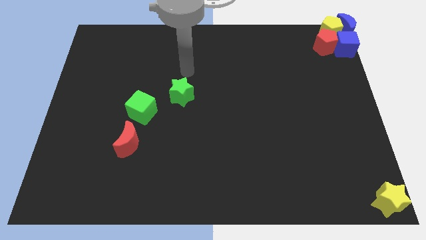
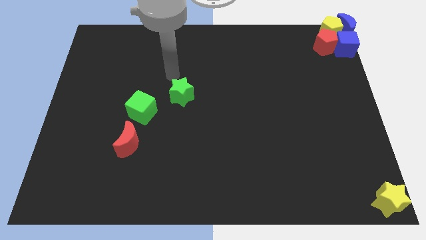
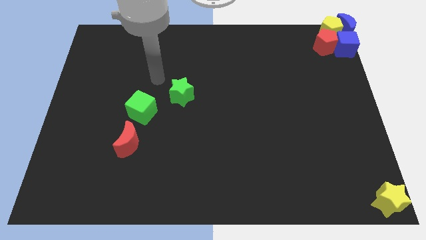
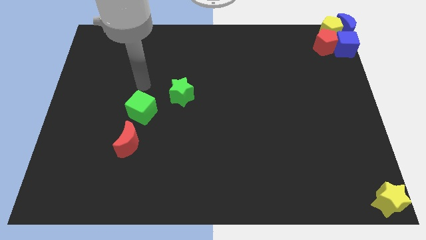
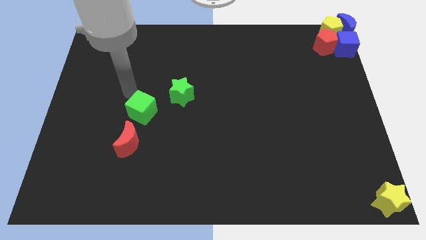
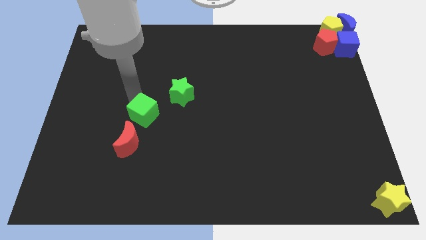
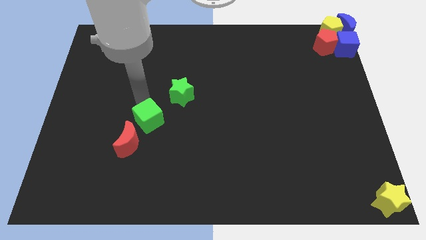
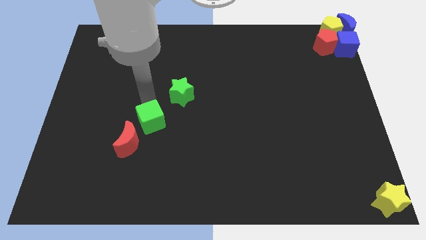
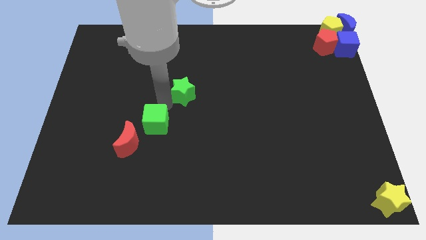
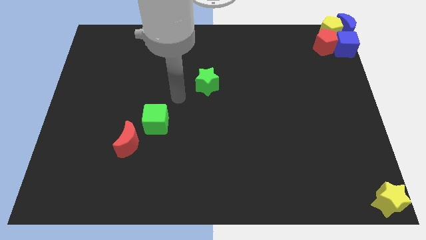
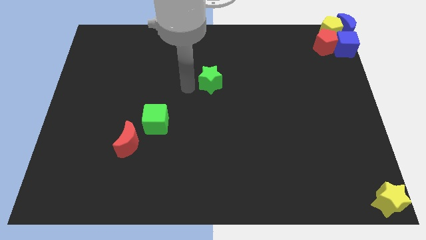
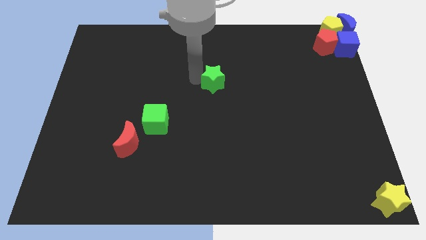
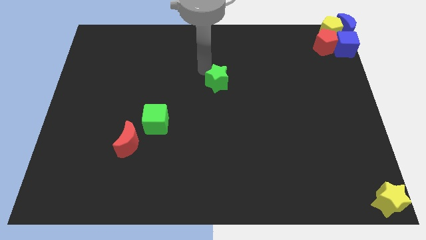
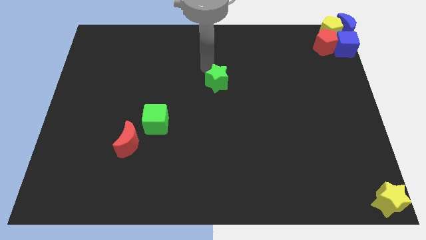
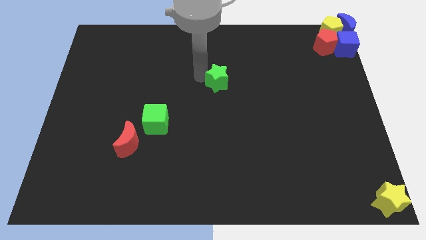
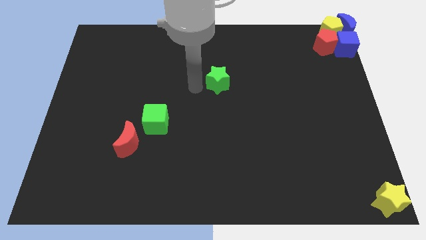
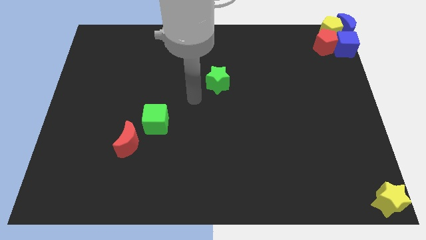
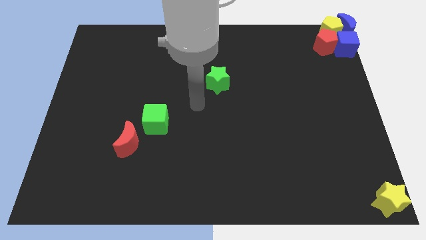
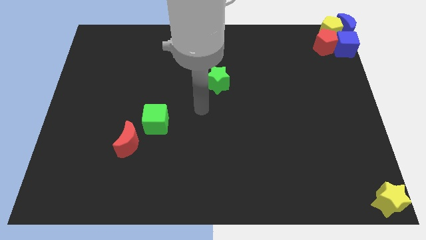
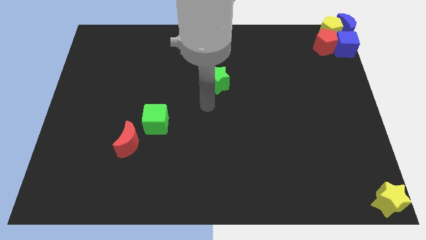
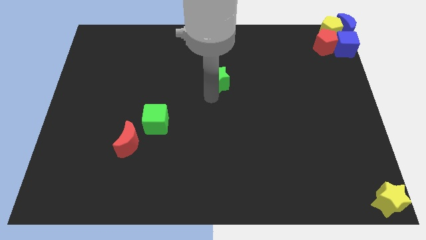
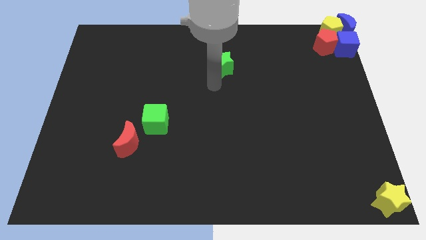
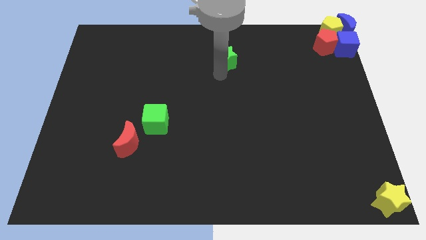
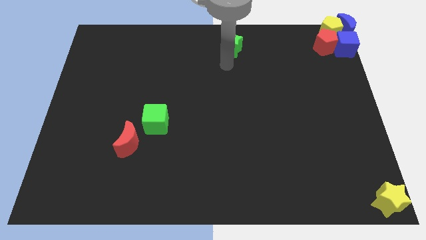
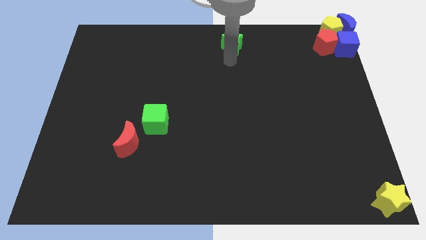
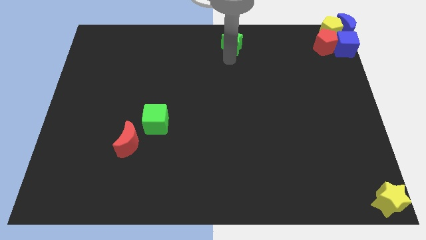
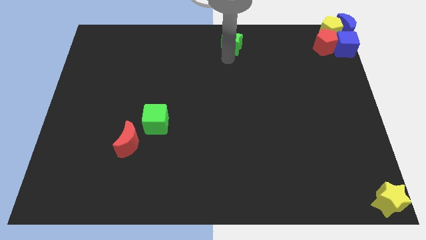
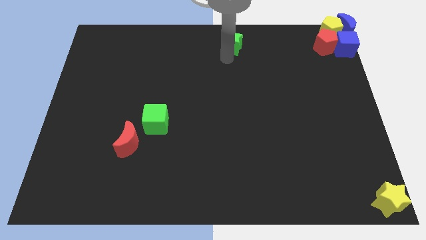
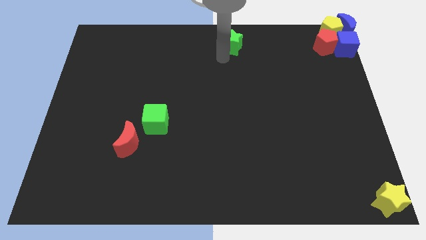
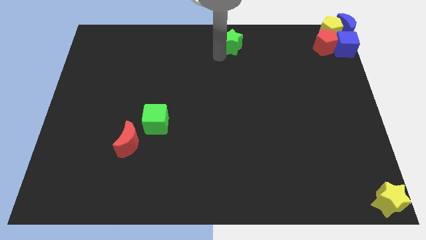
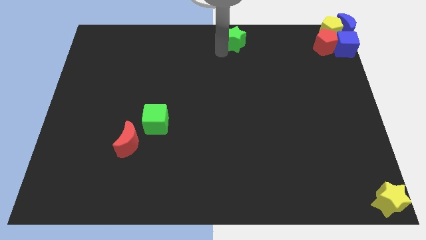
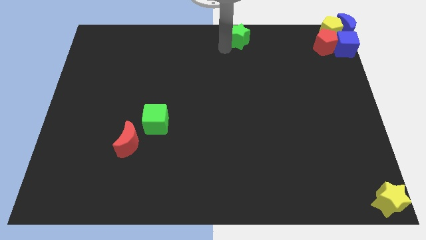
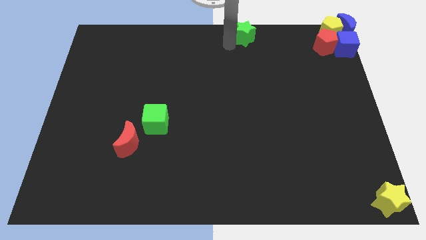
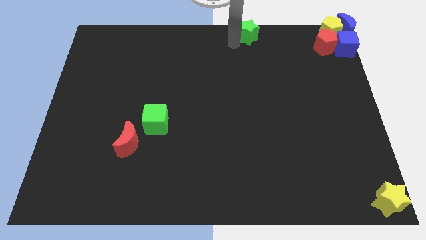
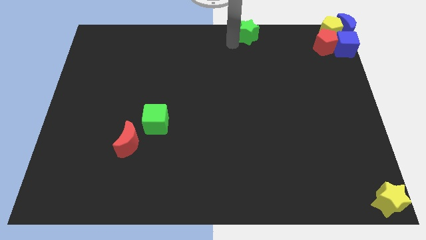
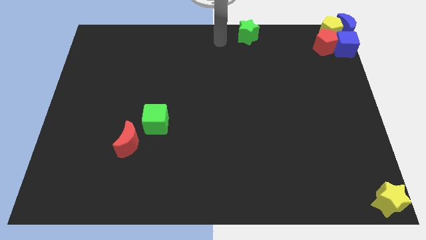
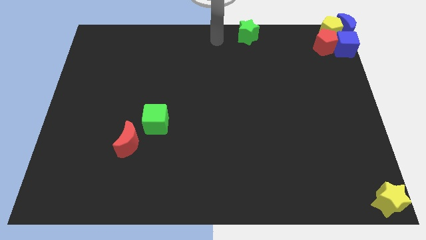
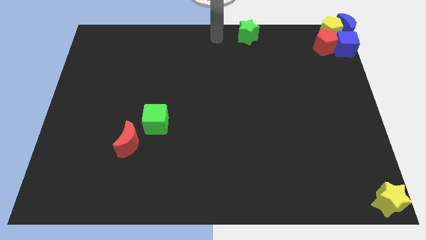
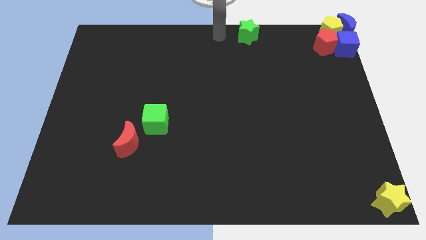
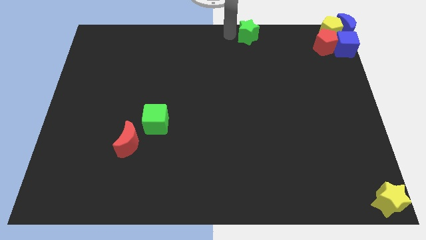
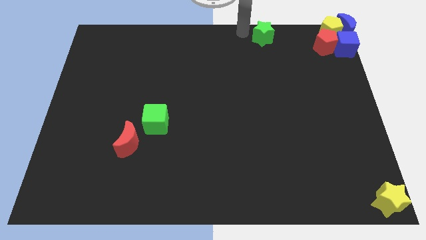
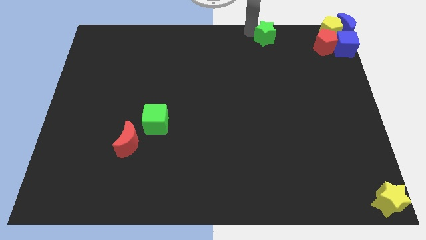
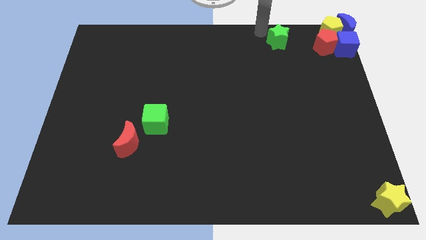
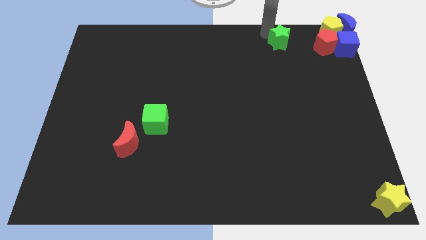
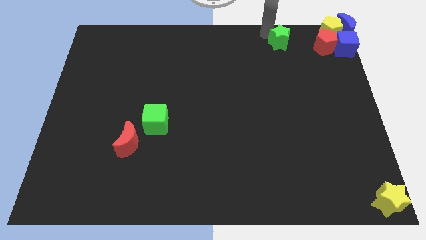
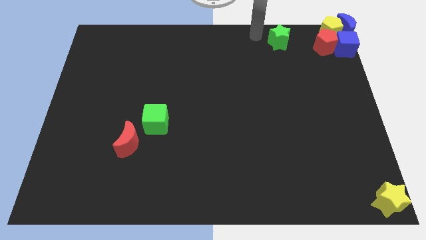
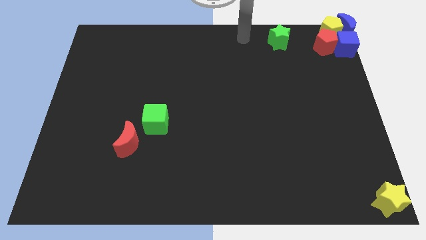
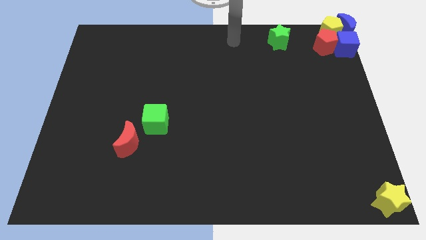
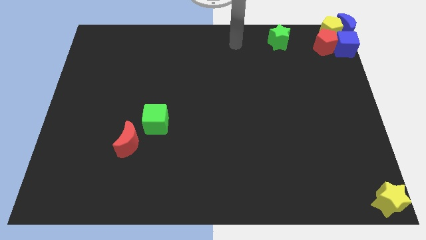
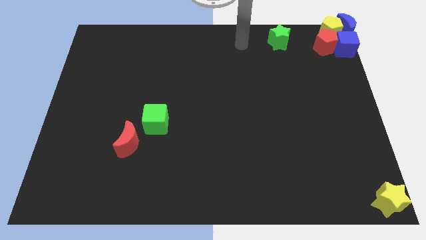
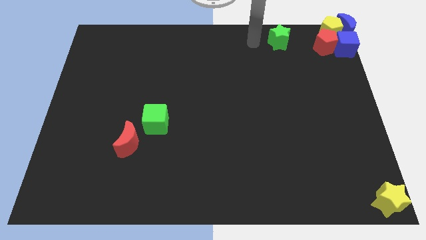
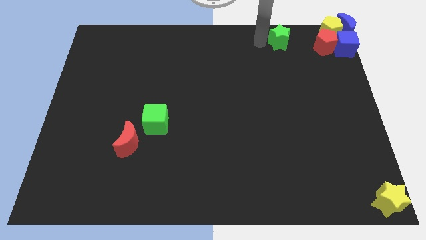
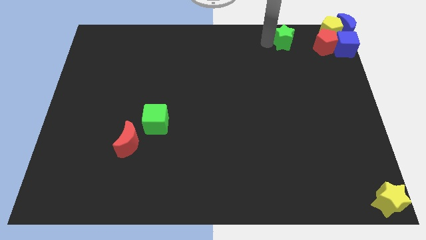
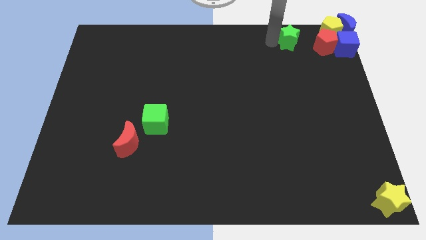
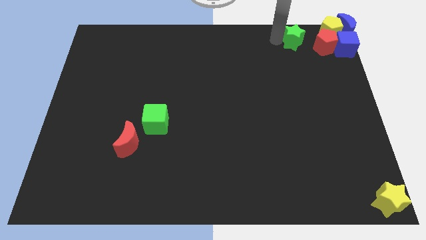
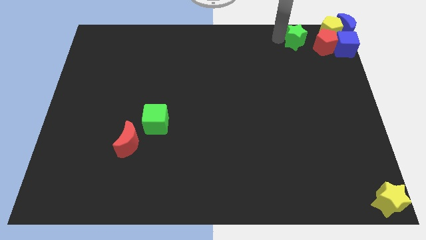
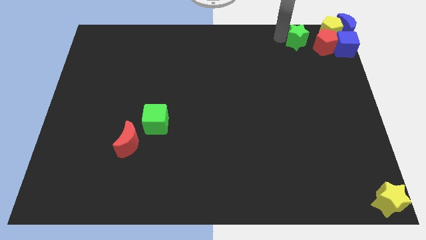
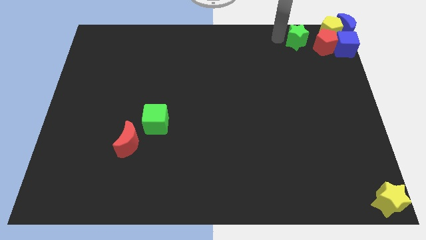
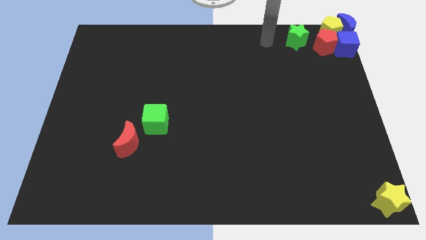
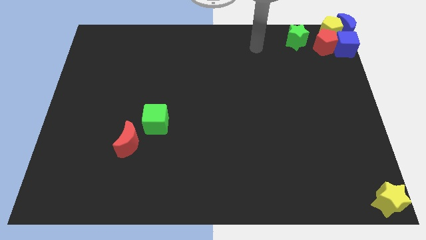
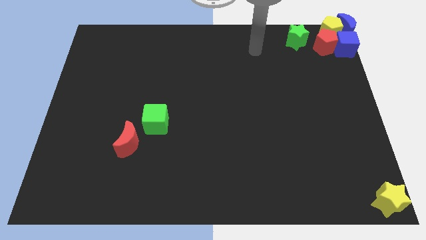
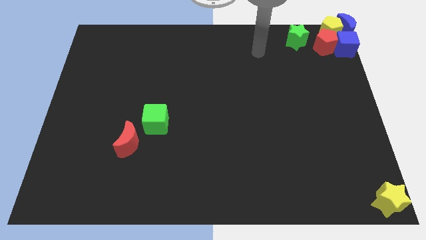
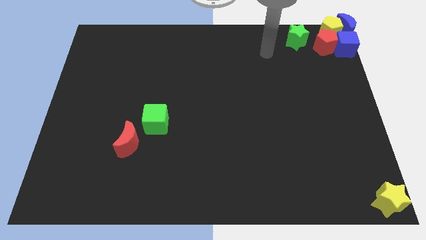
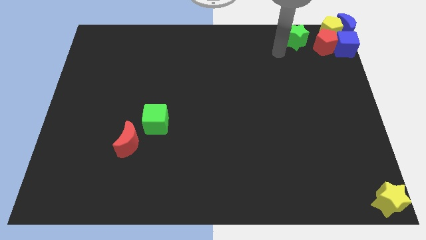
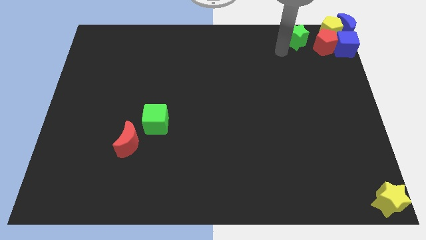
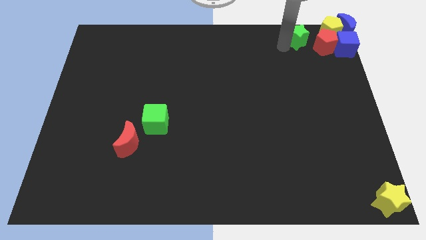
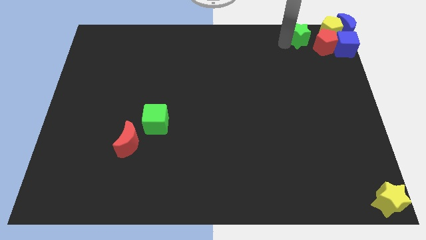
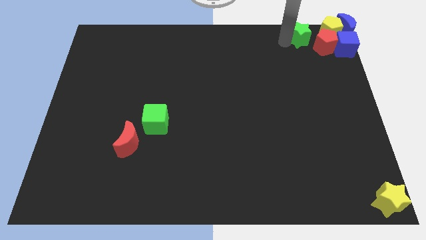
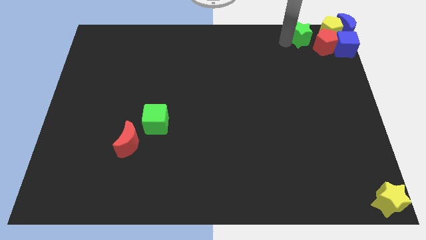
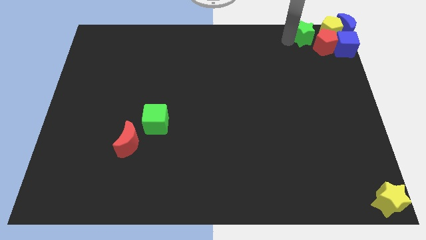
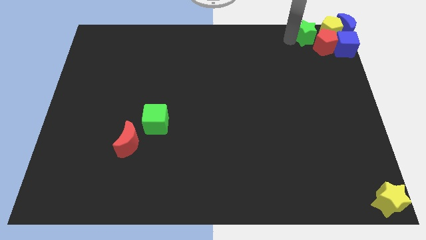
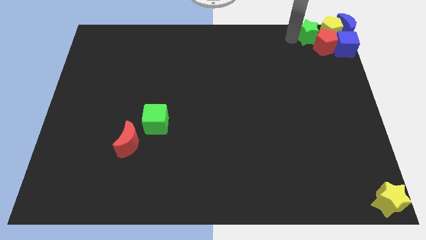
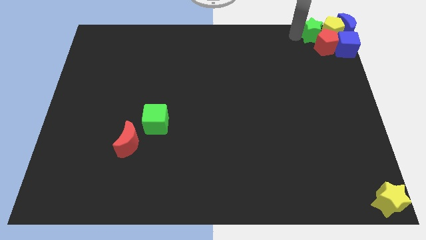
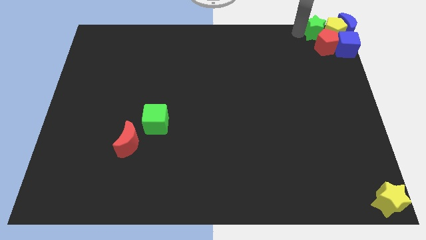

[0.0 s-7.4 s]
slide the green star into the group of blocks at the top right corner

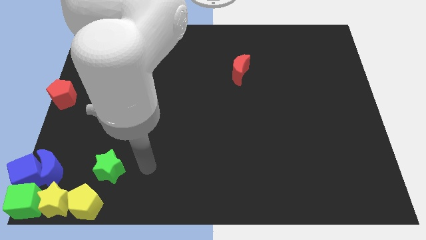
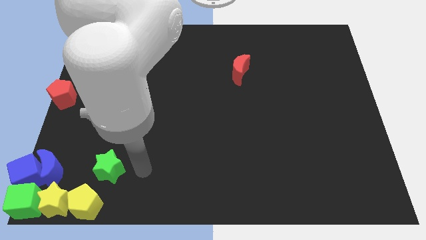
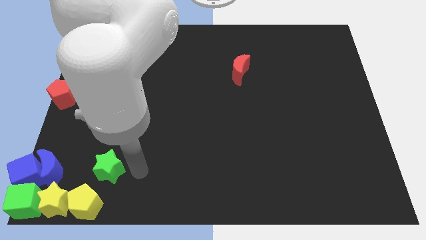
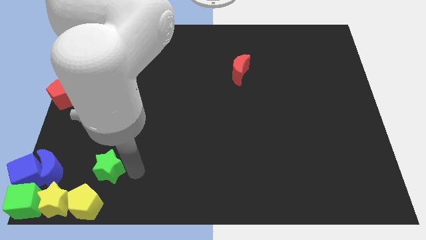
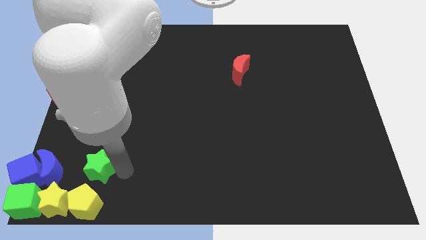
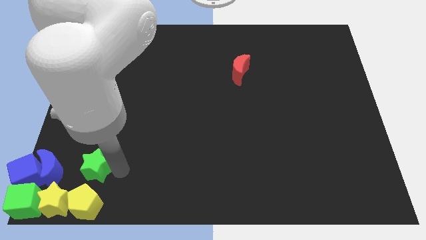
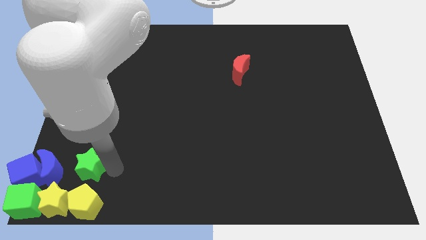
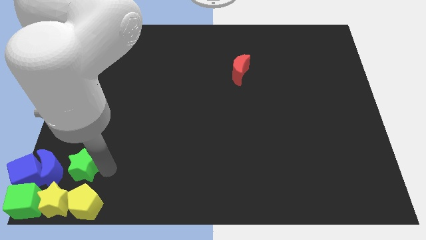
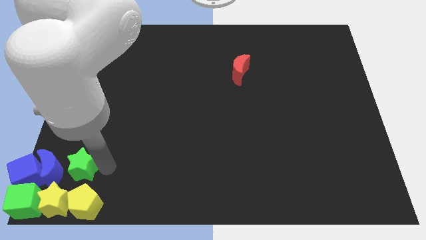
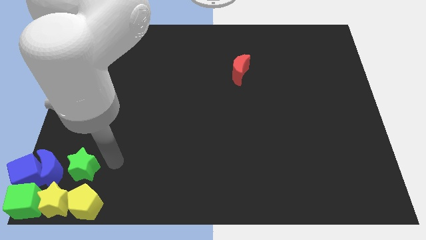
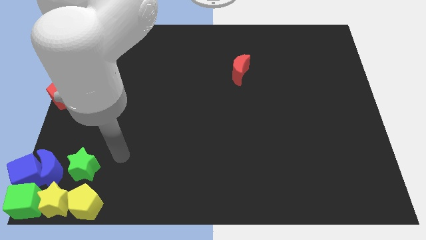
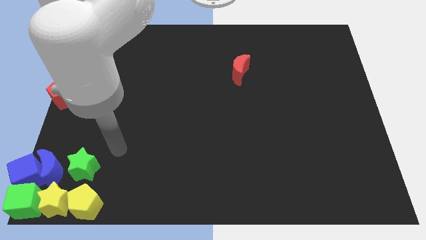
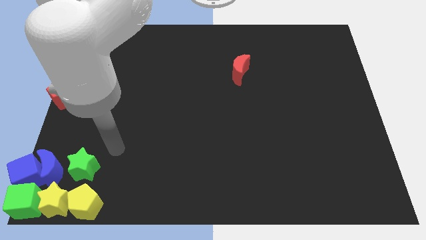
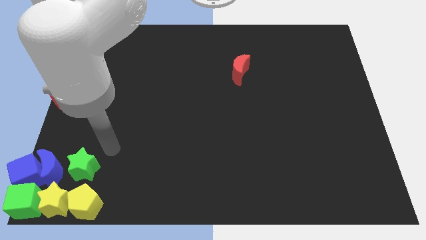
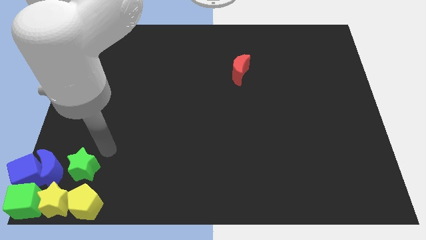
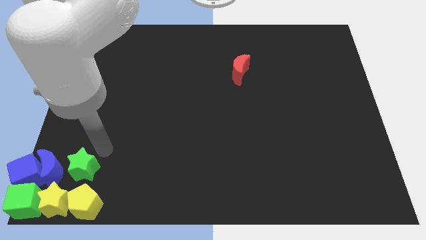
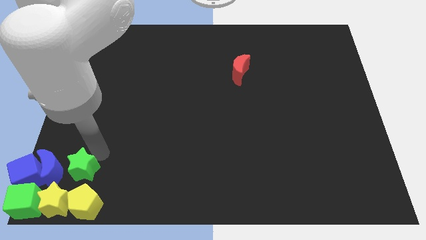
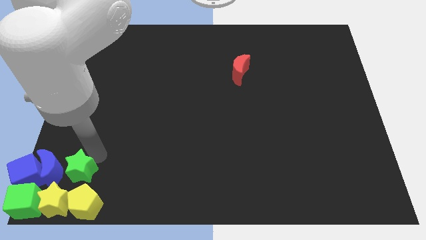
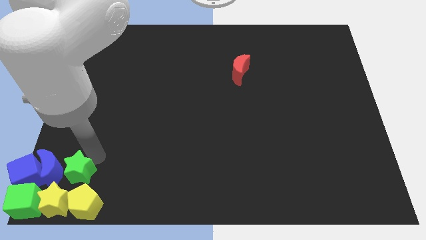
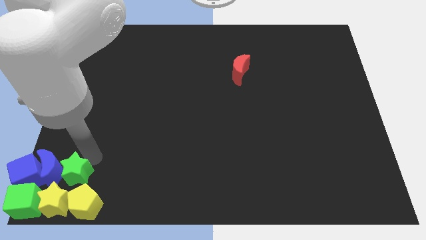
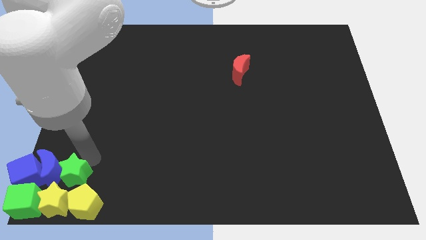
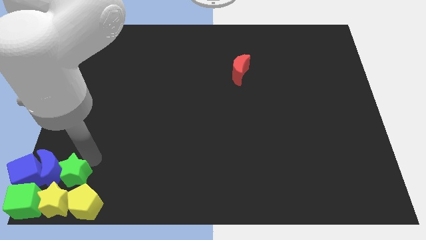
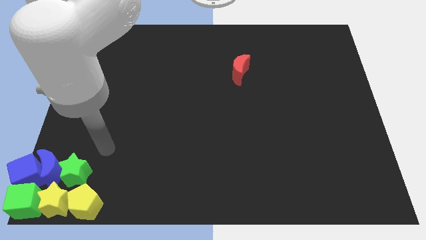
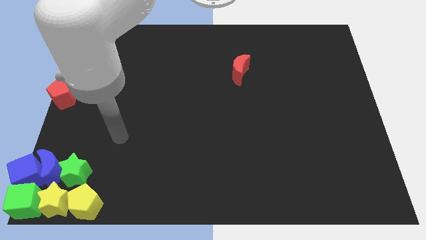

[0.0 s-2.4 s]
move the green star to the right of the blue crescent
